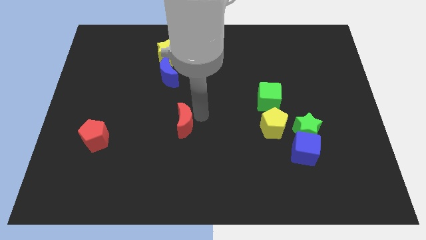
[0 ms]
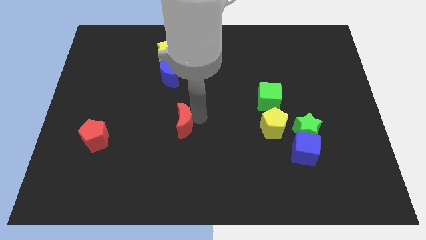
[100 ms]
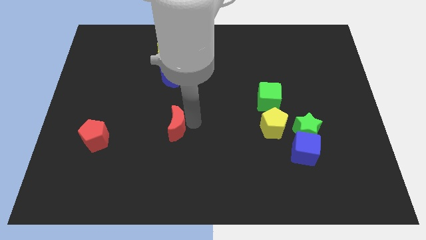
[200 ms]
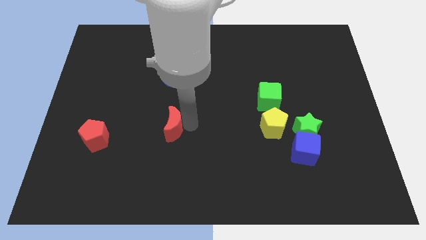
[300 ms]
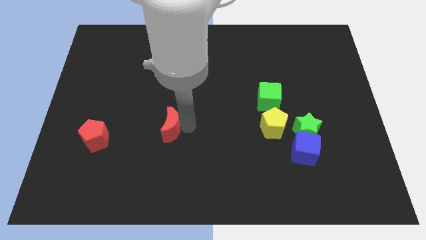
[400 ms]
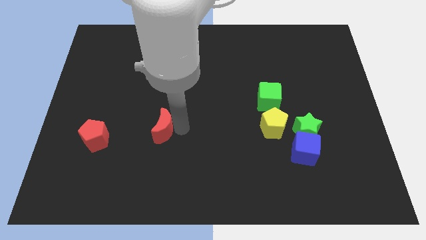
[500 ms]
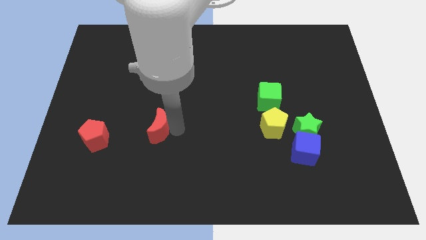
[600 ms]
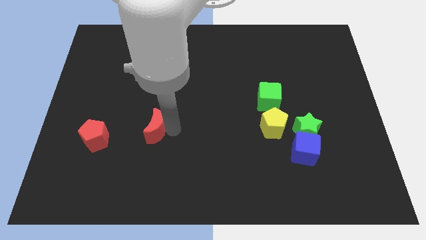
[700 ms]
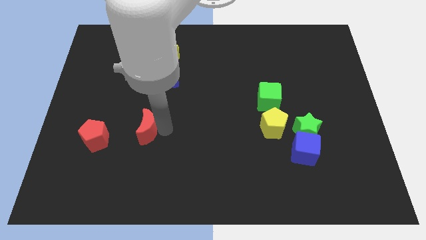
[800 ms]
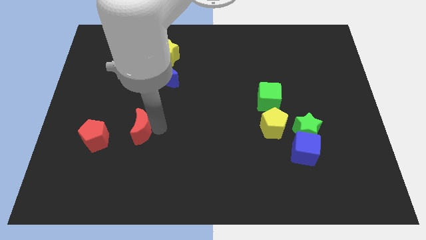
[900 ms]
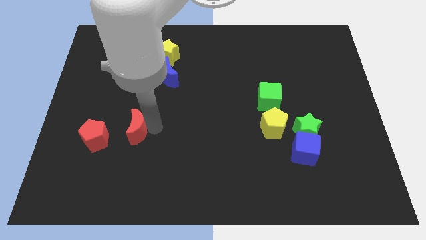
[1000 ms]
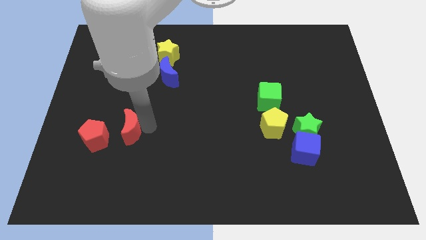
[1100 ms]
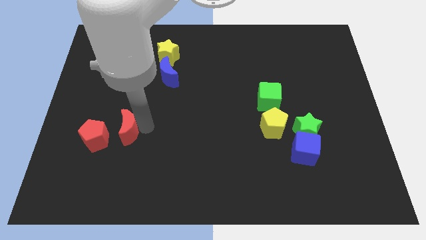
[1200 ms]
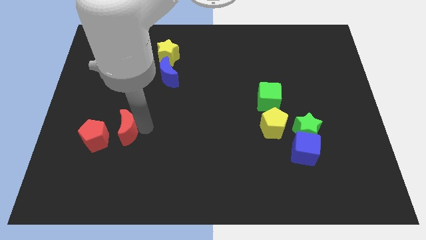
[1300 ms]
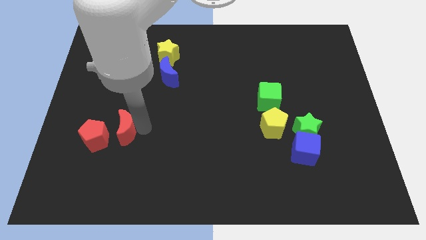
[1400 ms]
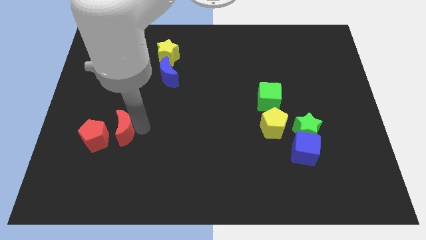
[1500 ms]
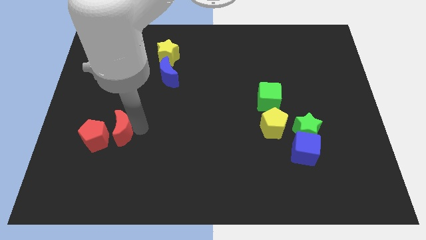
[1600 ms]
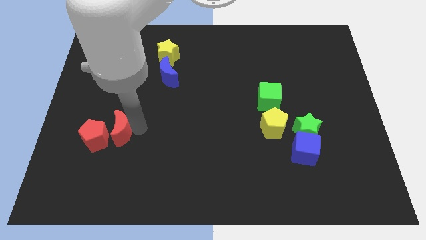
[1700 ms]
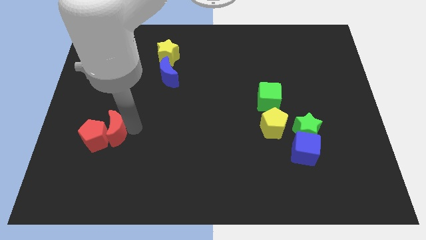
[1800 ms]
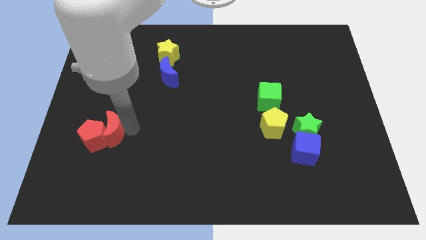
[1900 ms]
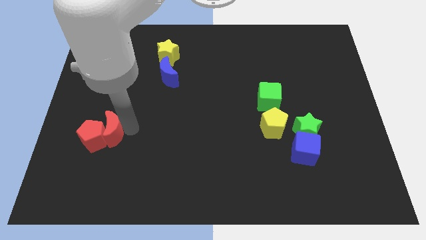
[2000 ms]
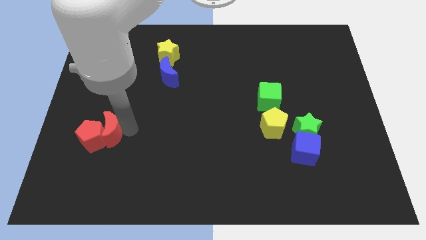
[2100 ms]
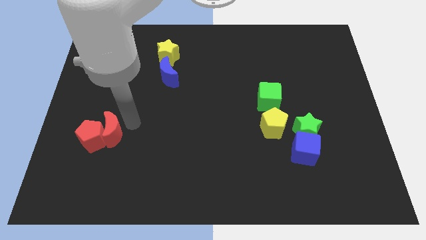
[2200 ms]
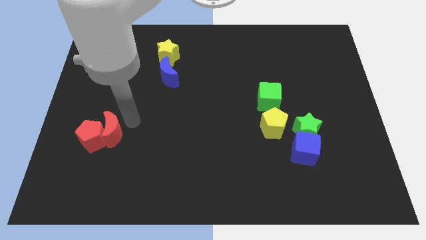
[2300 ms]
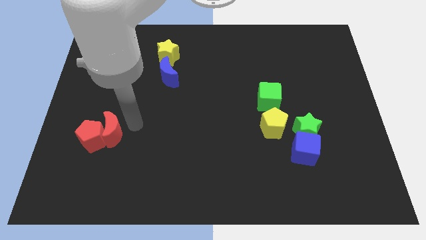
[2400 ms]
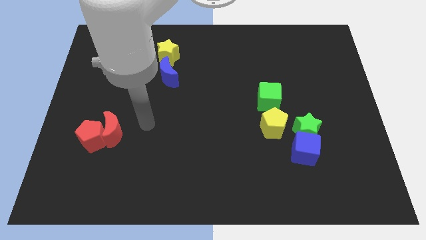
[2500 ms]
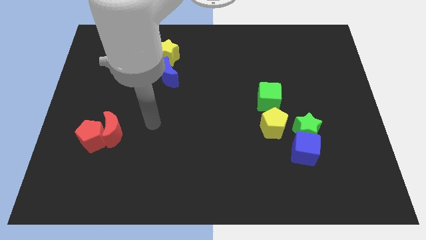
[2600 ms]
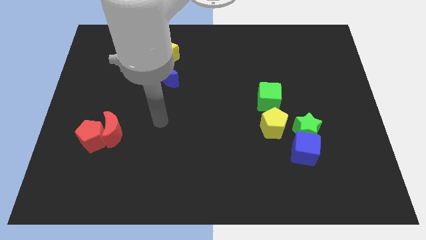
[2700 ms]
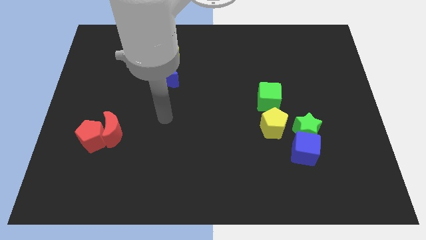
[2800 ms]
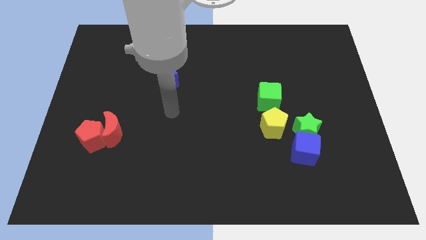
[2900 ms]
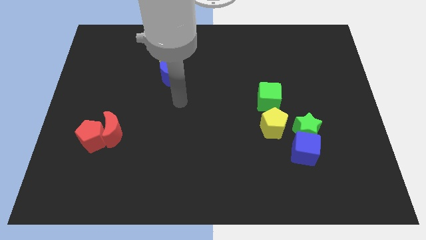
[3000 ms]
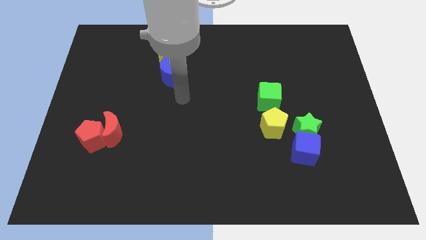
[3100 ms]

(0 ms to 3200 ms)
push the red moon into the red pentagon

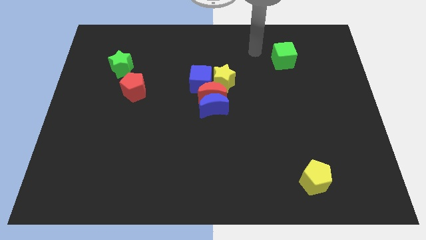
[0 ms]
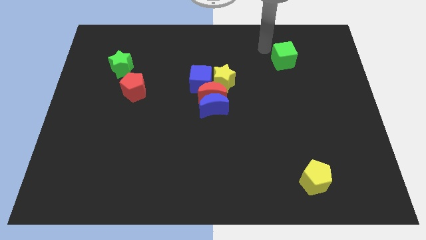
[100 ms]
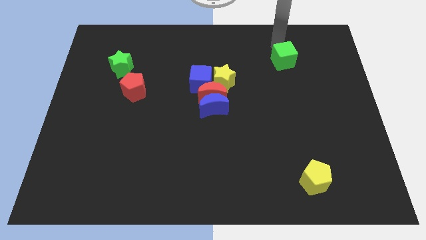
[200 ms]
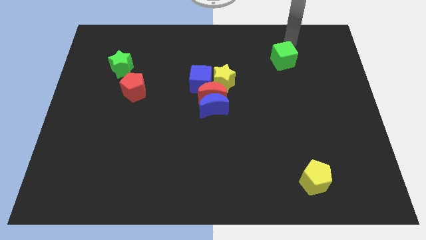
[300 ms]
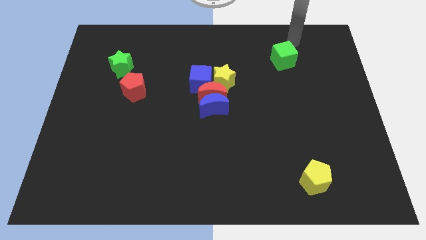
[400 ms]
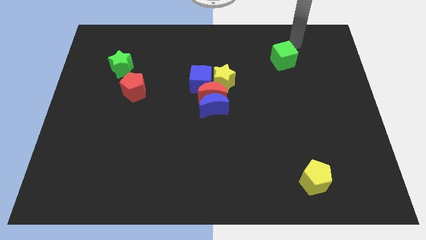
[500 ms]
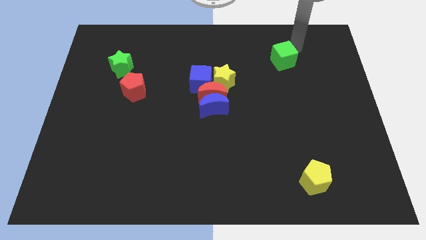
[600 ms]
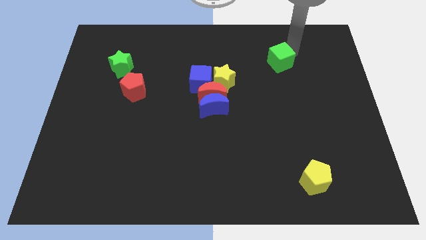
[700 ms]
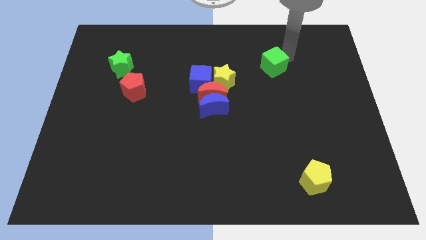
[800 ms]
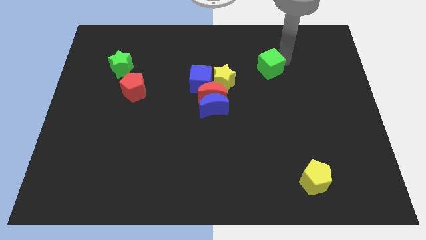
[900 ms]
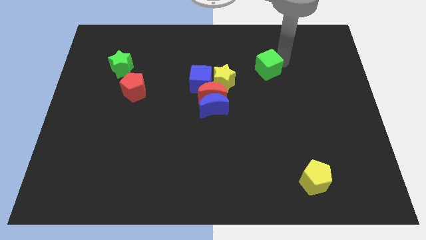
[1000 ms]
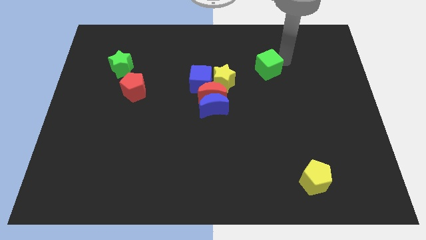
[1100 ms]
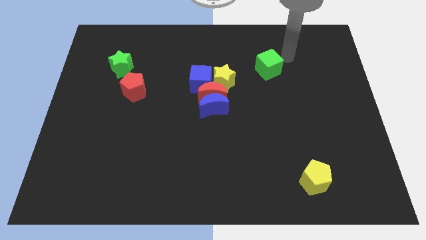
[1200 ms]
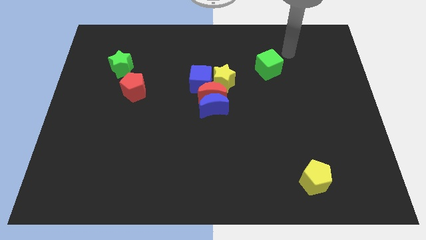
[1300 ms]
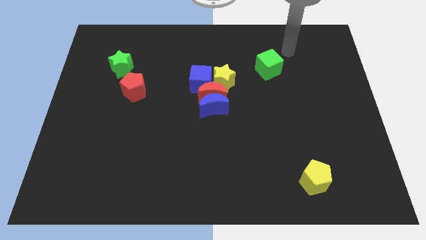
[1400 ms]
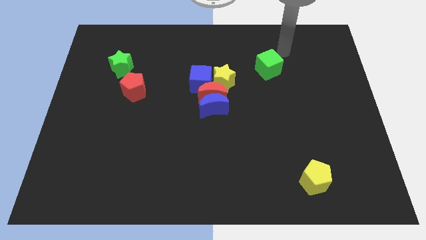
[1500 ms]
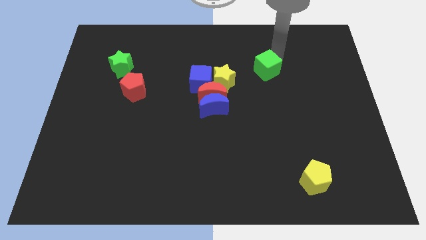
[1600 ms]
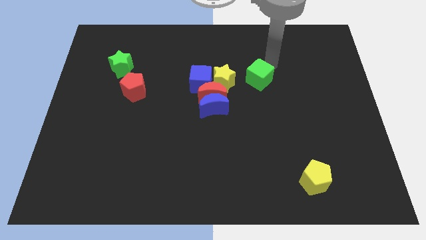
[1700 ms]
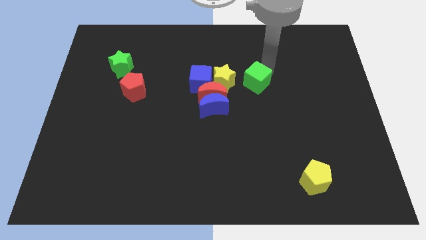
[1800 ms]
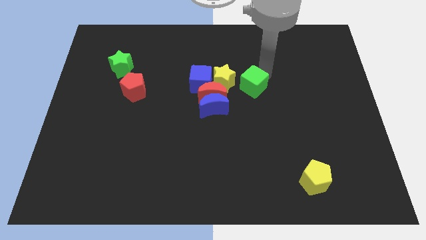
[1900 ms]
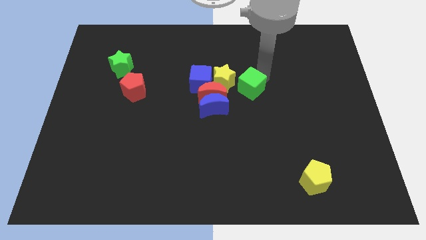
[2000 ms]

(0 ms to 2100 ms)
move green cube to the right of yellow star

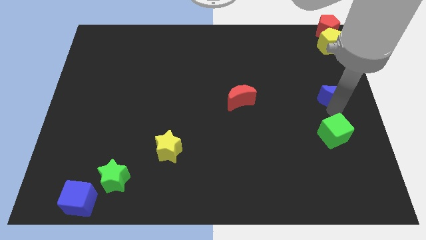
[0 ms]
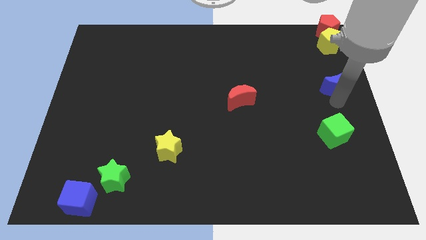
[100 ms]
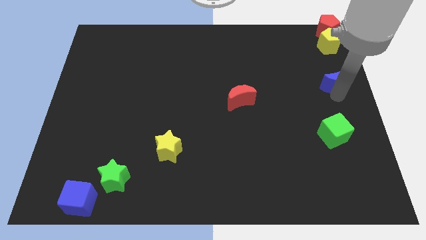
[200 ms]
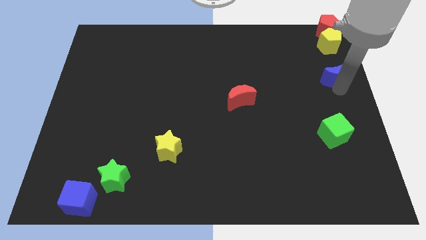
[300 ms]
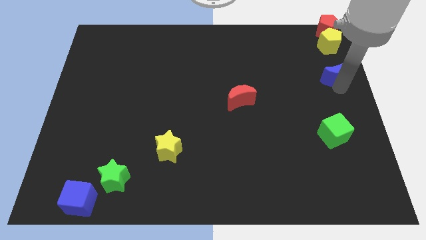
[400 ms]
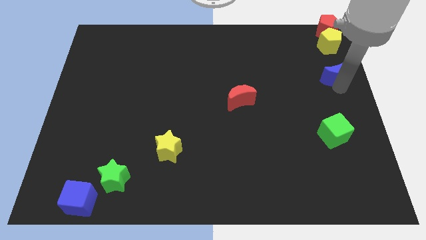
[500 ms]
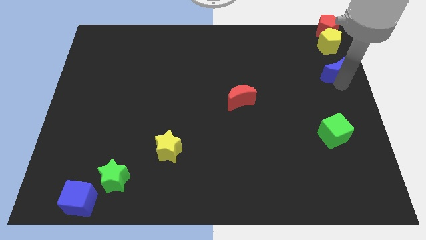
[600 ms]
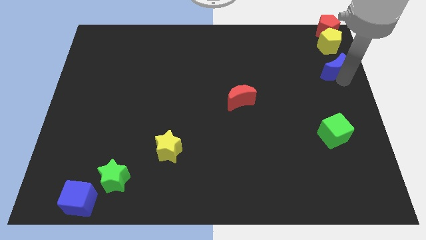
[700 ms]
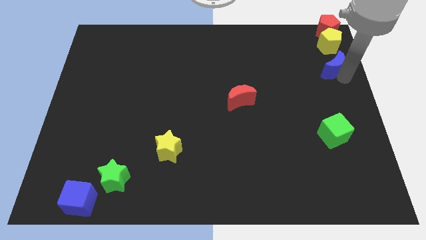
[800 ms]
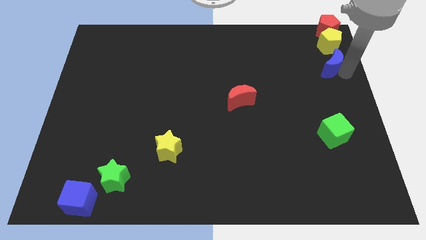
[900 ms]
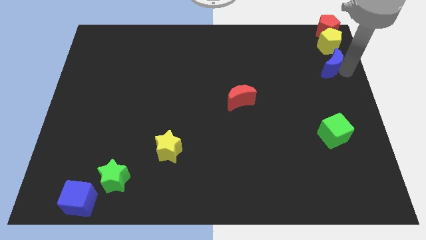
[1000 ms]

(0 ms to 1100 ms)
push the blue moon towards the yellow pentagon

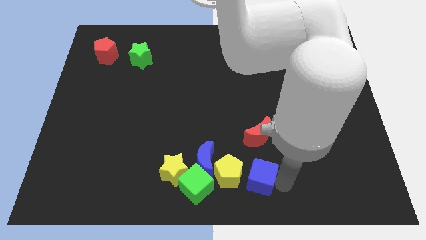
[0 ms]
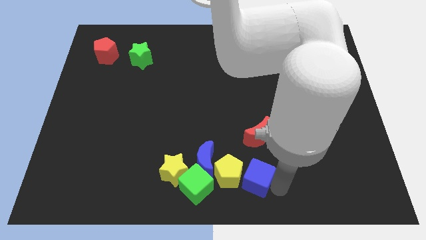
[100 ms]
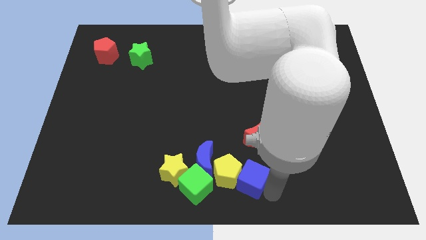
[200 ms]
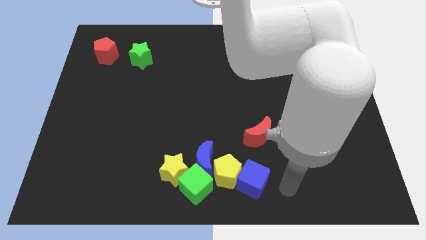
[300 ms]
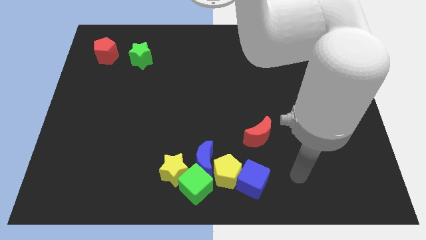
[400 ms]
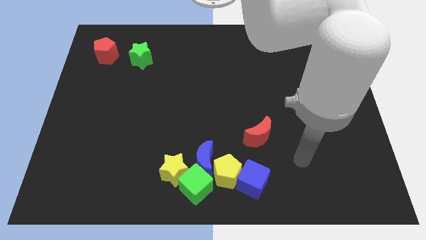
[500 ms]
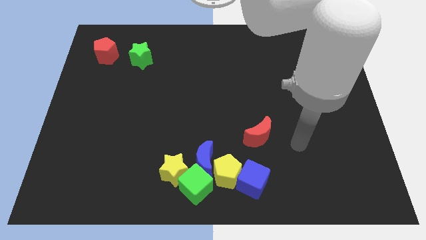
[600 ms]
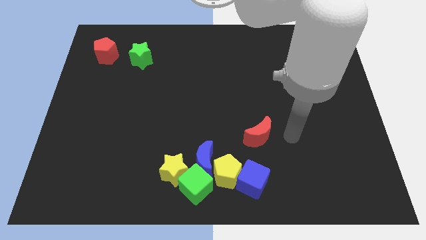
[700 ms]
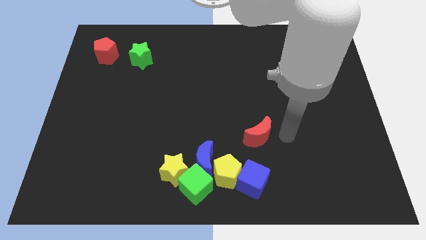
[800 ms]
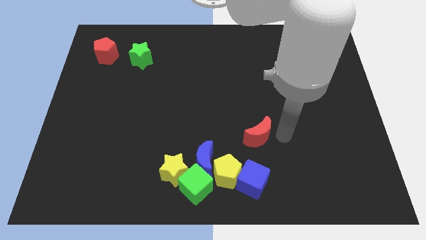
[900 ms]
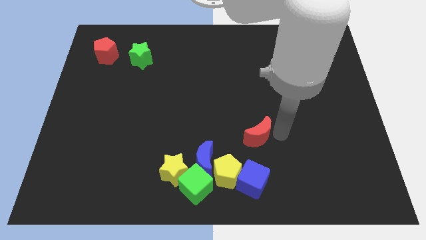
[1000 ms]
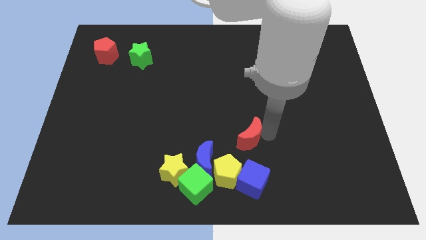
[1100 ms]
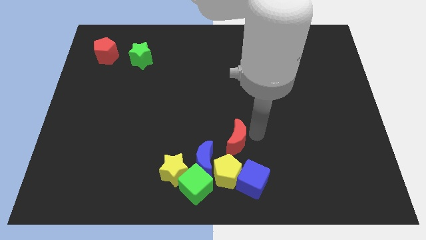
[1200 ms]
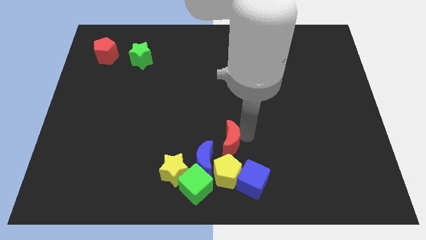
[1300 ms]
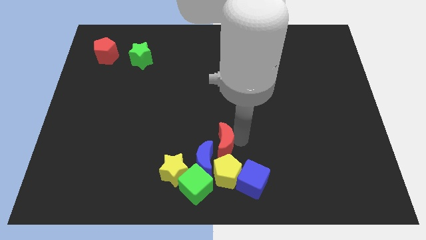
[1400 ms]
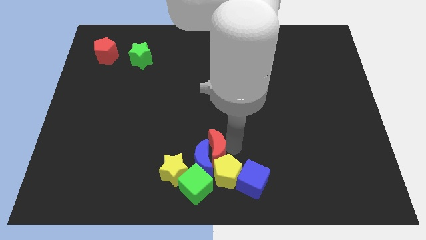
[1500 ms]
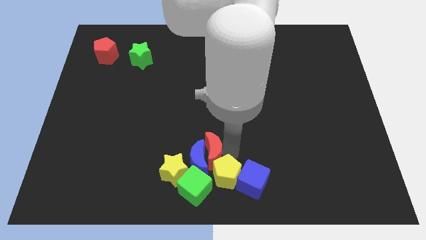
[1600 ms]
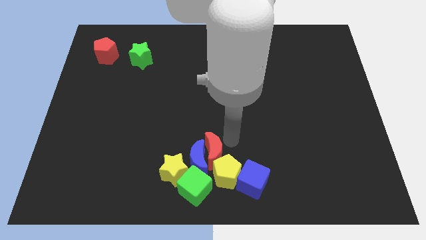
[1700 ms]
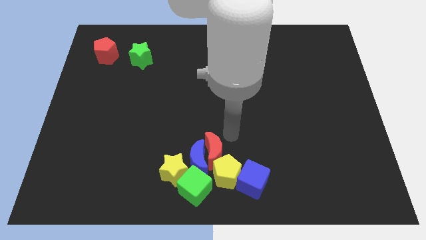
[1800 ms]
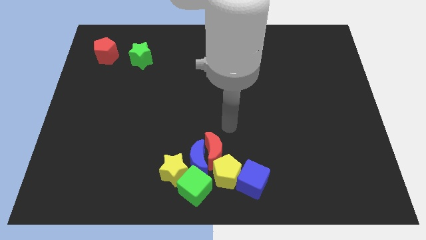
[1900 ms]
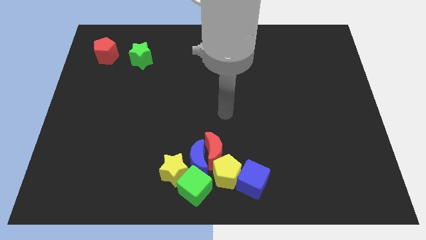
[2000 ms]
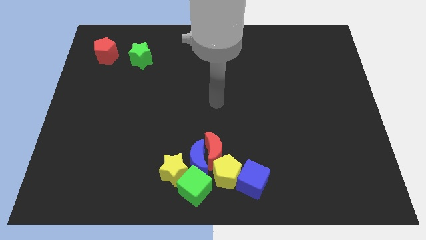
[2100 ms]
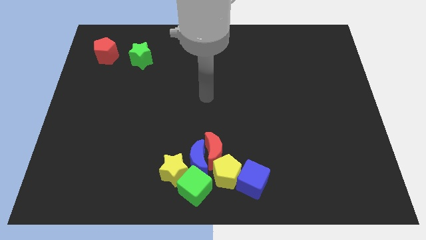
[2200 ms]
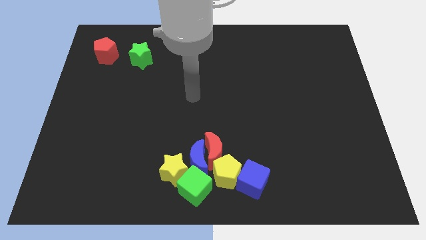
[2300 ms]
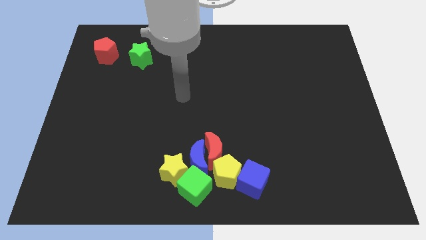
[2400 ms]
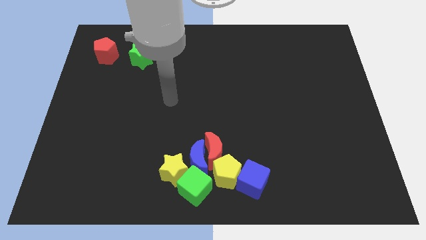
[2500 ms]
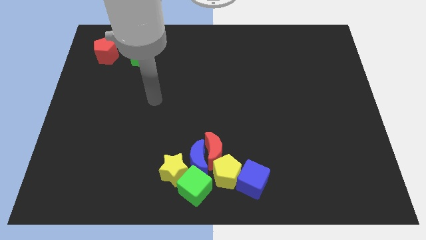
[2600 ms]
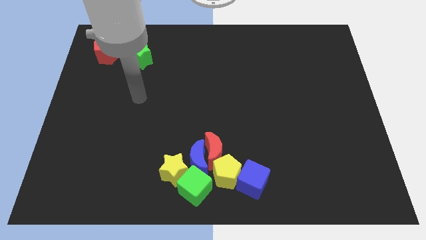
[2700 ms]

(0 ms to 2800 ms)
push the red half moon into the group of blocks
